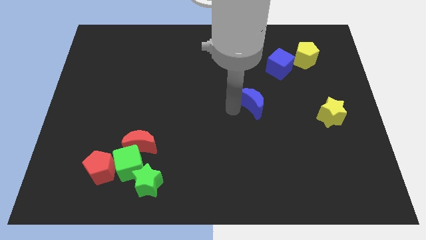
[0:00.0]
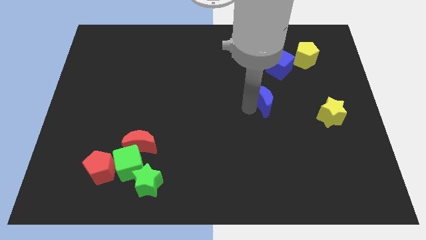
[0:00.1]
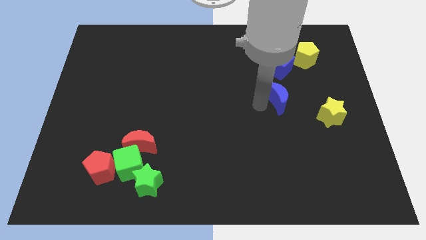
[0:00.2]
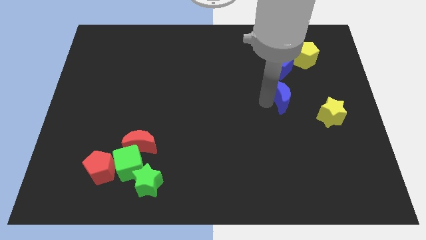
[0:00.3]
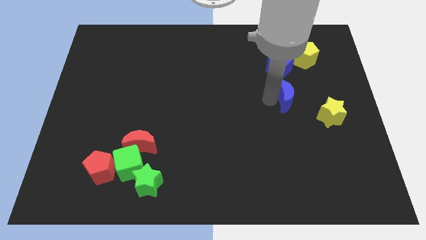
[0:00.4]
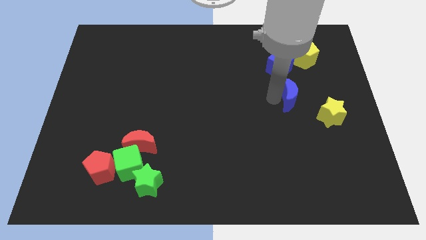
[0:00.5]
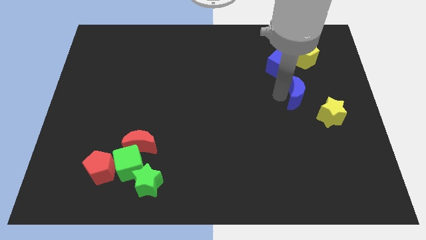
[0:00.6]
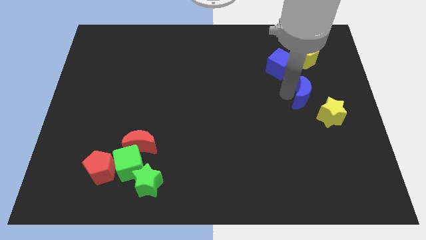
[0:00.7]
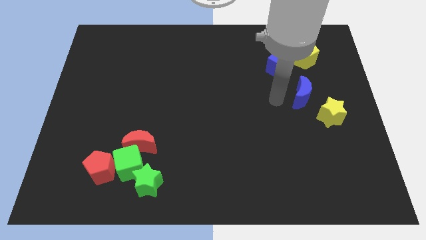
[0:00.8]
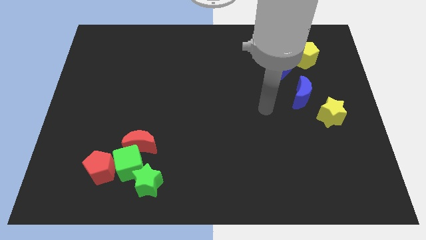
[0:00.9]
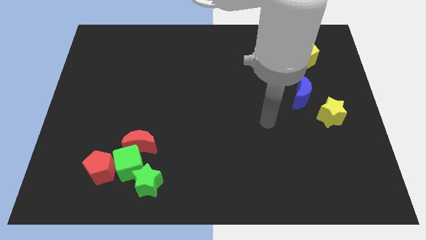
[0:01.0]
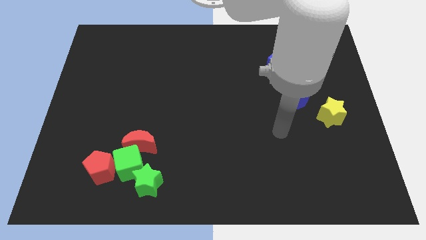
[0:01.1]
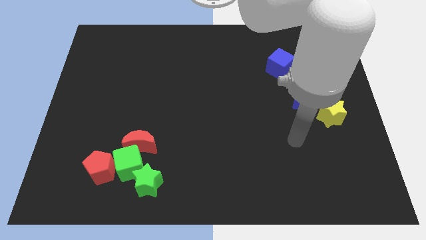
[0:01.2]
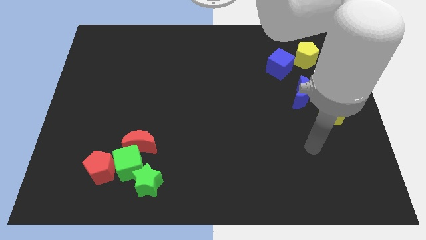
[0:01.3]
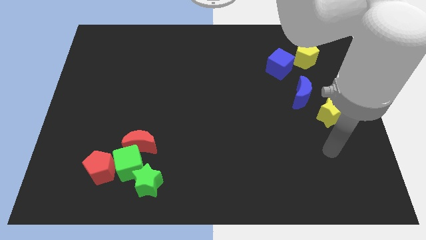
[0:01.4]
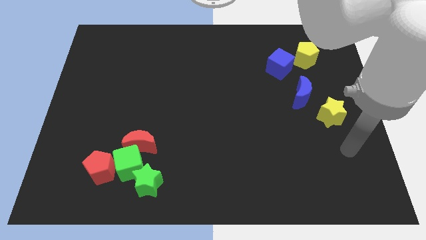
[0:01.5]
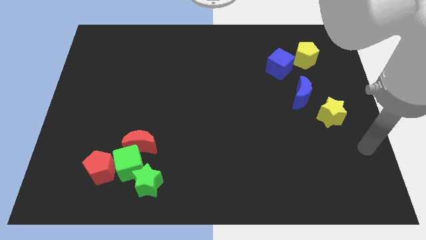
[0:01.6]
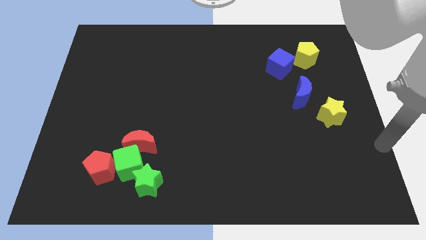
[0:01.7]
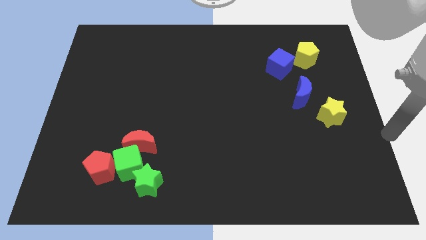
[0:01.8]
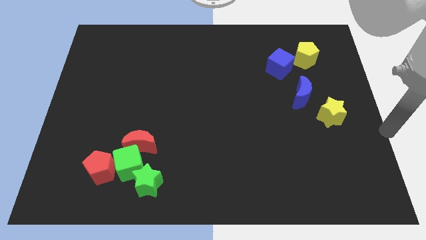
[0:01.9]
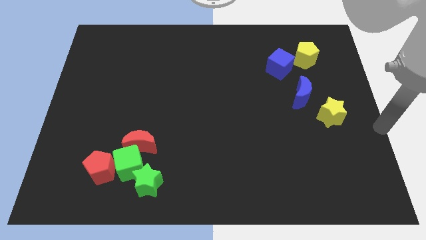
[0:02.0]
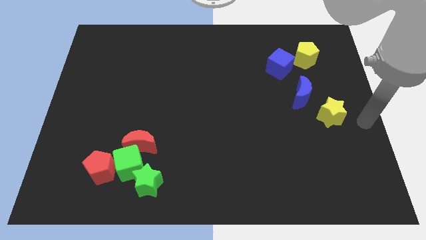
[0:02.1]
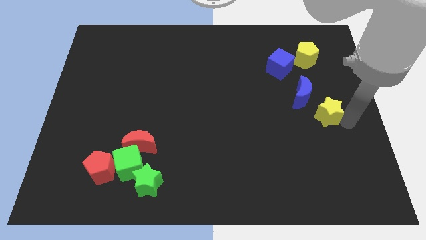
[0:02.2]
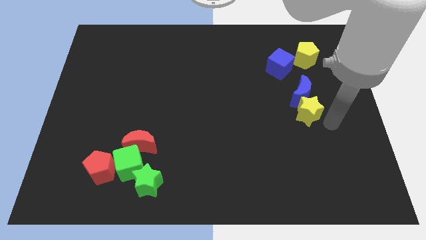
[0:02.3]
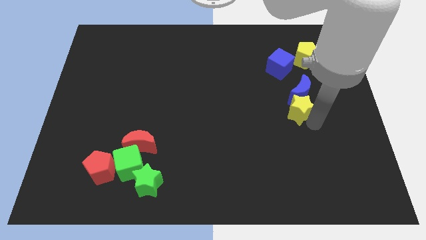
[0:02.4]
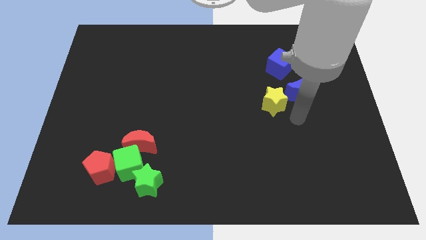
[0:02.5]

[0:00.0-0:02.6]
push yellow star into blue moon

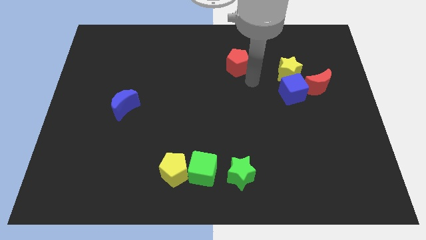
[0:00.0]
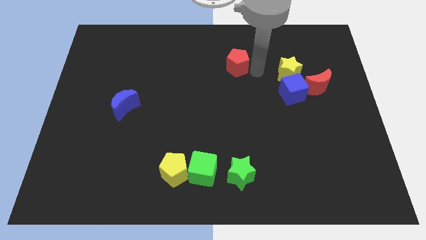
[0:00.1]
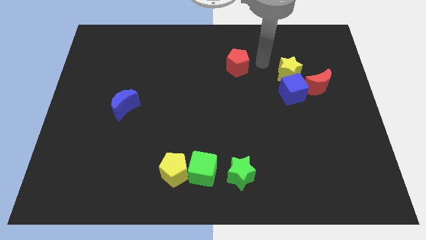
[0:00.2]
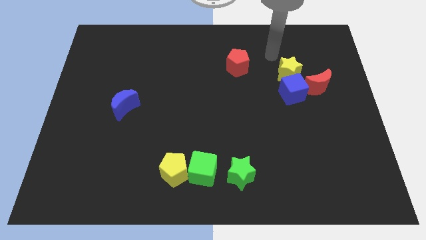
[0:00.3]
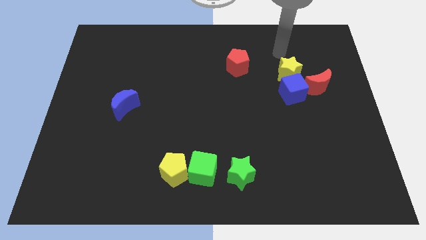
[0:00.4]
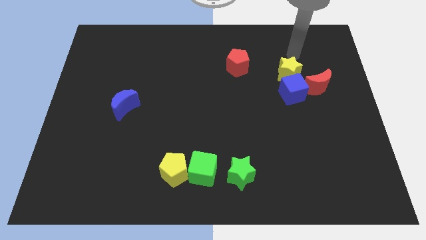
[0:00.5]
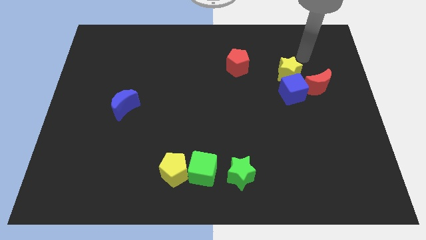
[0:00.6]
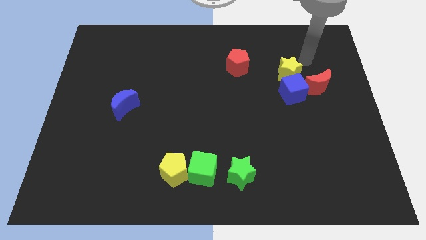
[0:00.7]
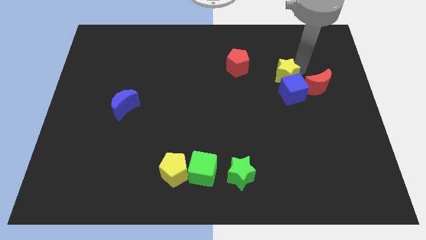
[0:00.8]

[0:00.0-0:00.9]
tap the yellow star

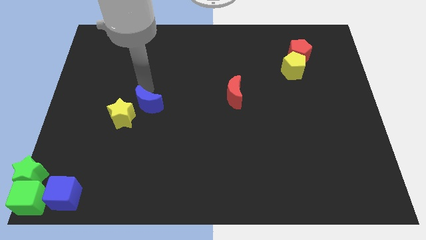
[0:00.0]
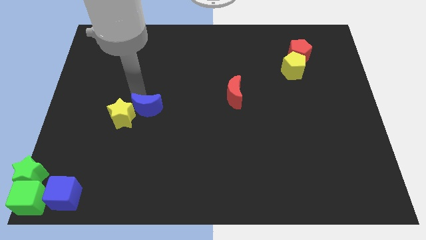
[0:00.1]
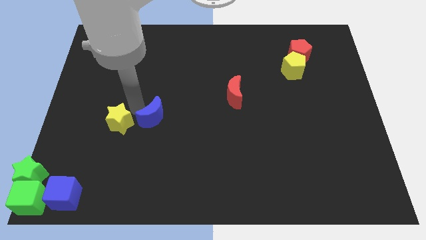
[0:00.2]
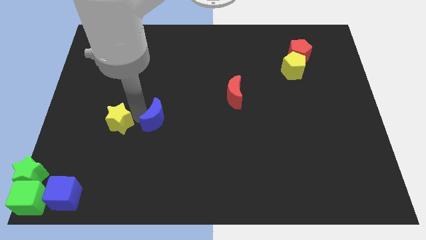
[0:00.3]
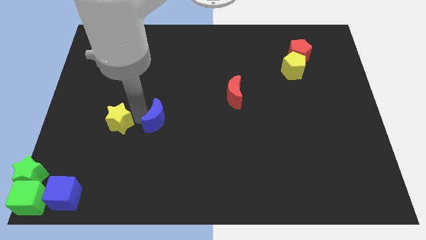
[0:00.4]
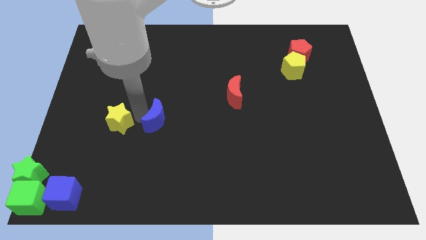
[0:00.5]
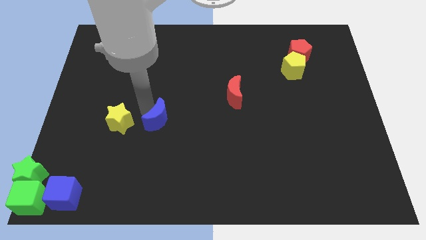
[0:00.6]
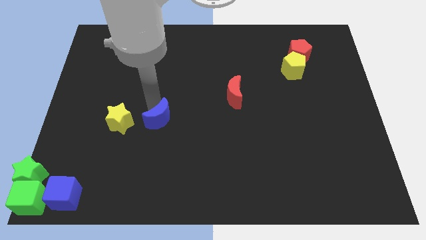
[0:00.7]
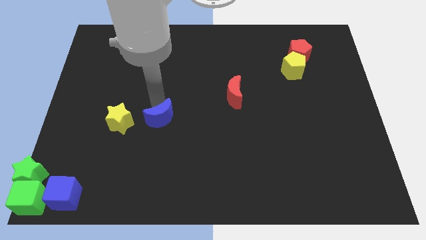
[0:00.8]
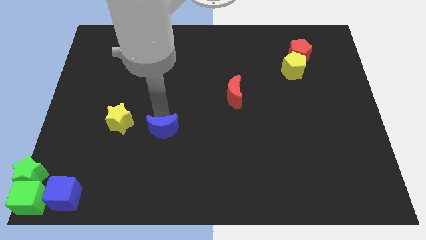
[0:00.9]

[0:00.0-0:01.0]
place the blue crescent to the right of the yellow star

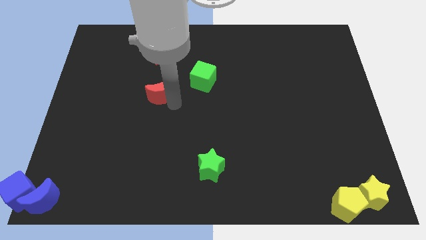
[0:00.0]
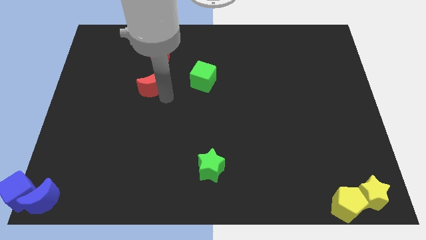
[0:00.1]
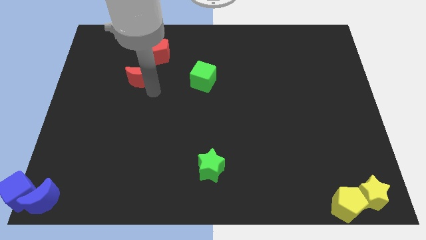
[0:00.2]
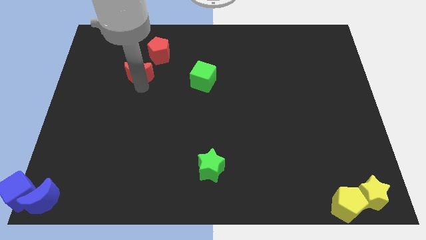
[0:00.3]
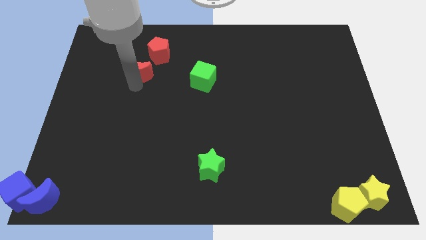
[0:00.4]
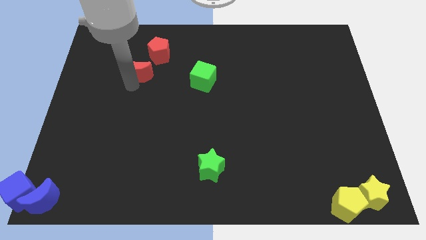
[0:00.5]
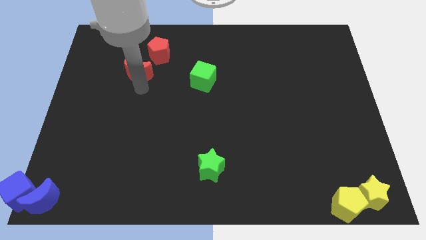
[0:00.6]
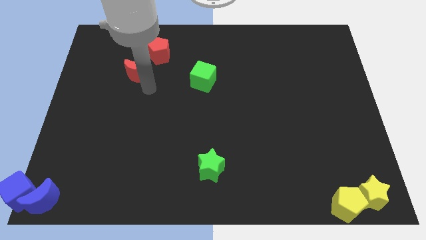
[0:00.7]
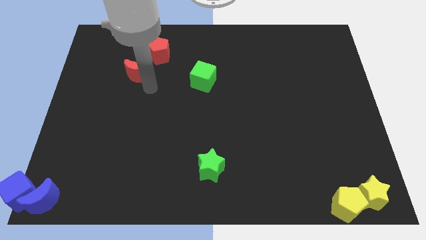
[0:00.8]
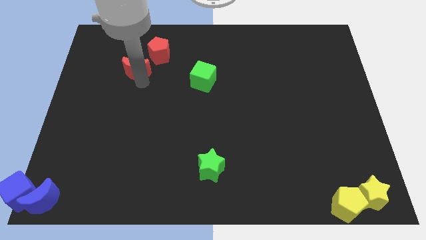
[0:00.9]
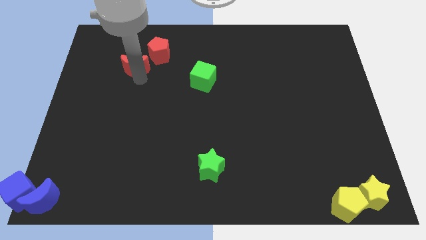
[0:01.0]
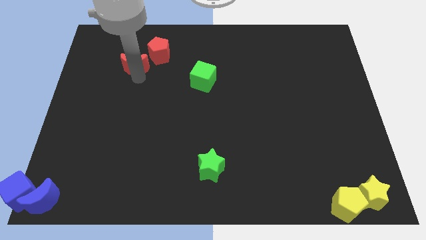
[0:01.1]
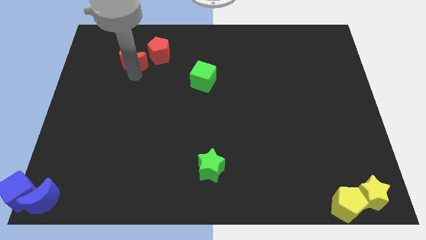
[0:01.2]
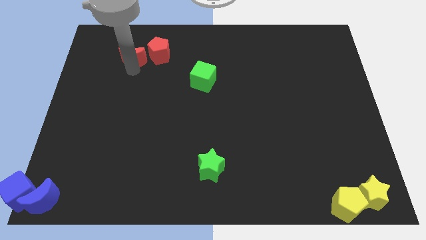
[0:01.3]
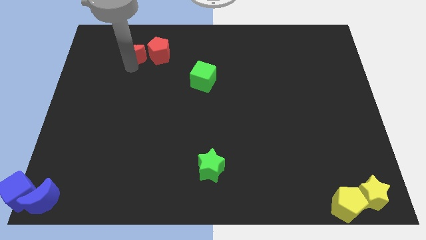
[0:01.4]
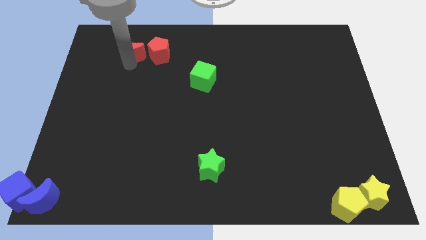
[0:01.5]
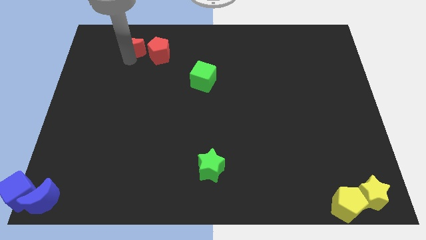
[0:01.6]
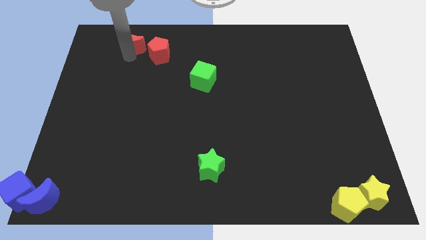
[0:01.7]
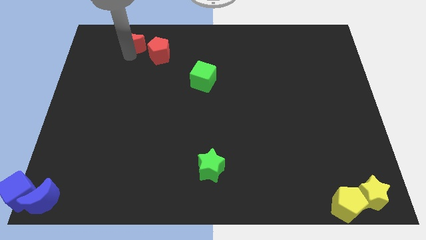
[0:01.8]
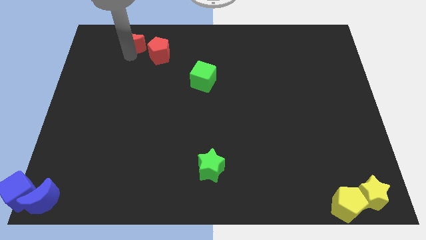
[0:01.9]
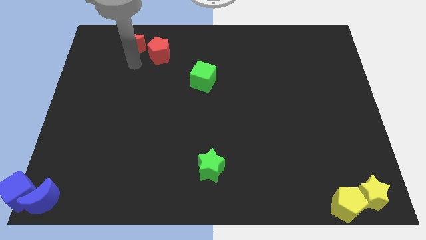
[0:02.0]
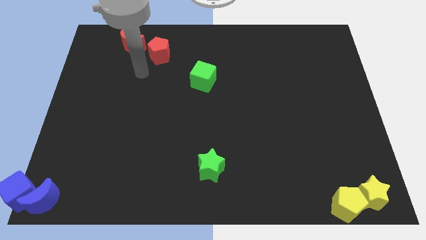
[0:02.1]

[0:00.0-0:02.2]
move the red crescent towards the left top

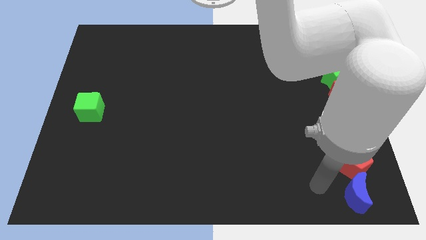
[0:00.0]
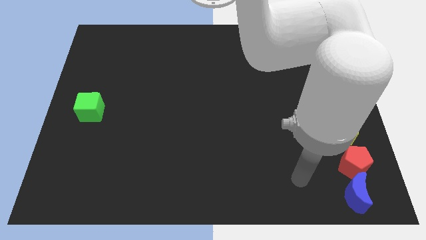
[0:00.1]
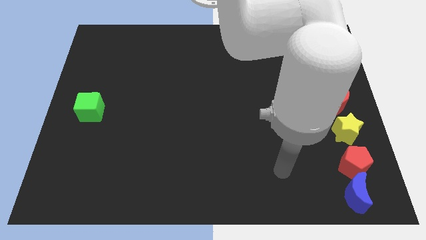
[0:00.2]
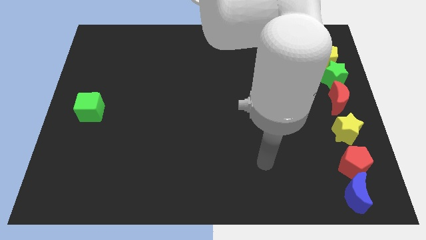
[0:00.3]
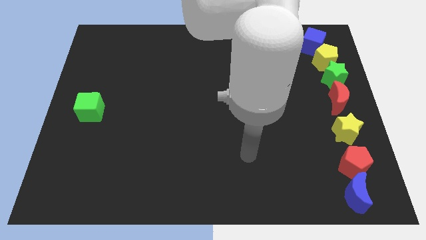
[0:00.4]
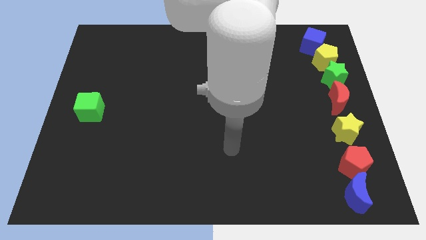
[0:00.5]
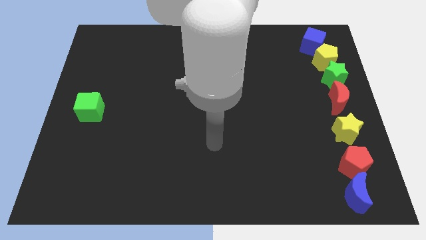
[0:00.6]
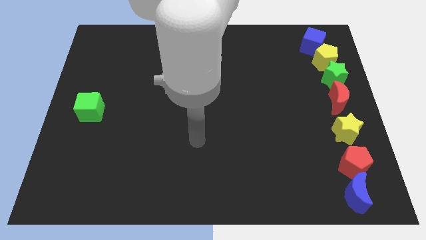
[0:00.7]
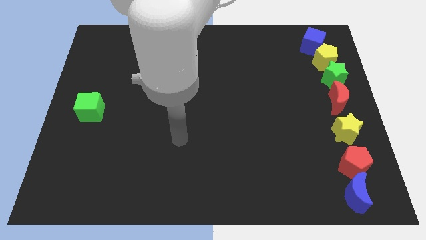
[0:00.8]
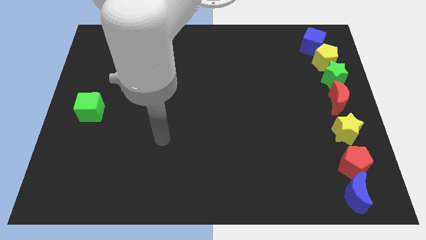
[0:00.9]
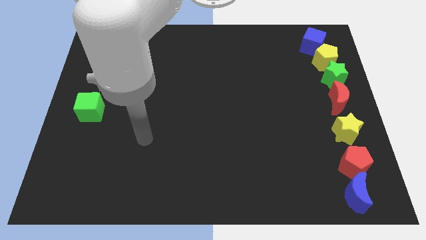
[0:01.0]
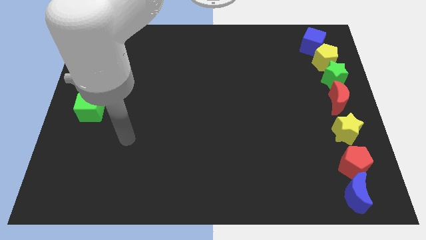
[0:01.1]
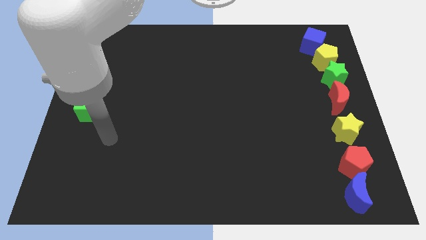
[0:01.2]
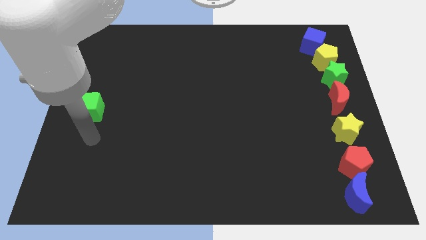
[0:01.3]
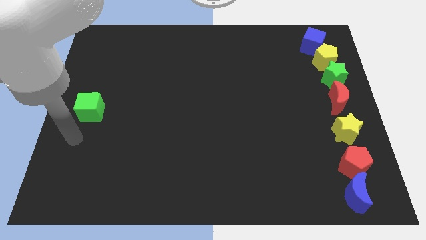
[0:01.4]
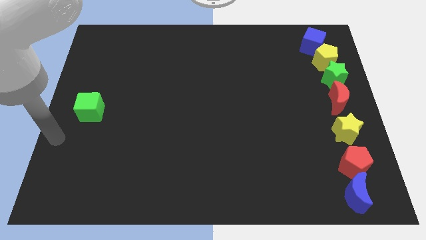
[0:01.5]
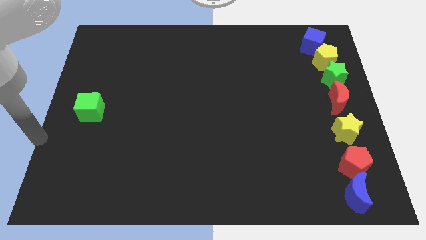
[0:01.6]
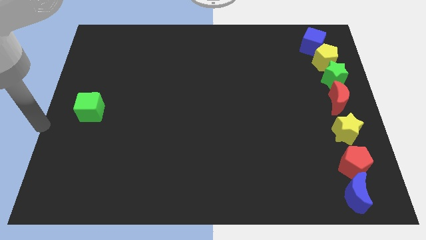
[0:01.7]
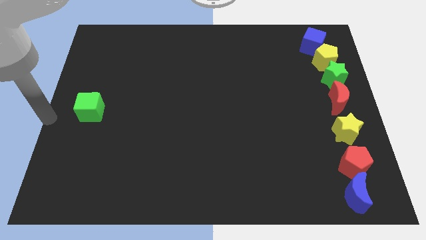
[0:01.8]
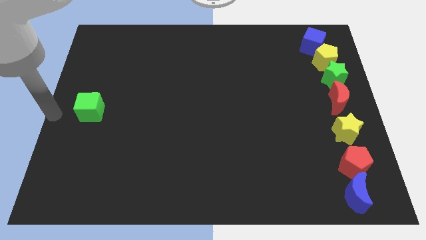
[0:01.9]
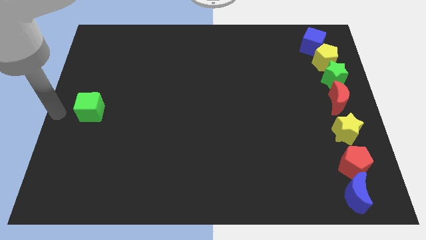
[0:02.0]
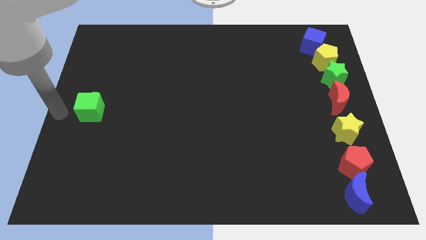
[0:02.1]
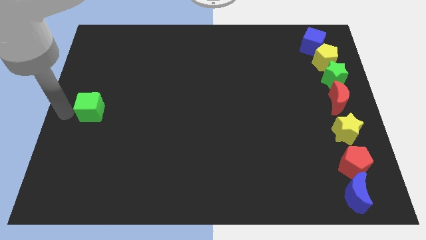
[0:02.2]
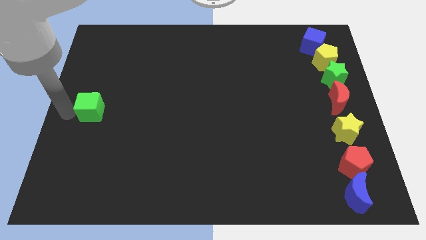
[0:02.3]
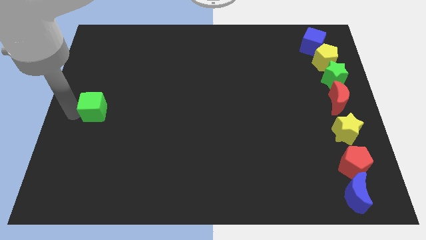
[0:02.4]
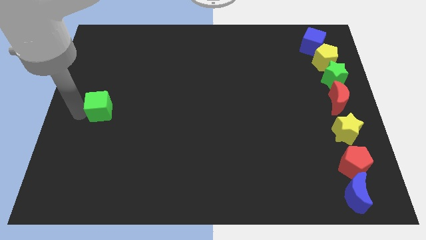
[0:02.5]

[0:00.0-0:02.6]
point your arm left to green cube
